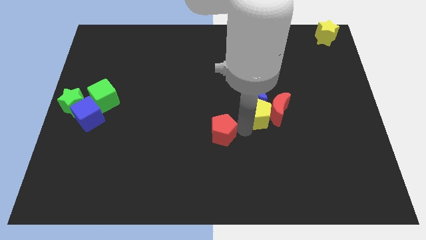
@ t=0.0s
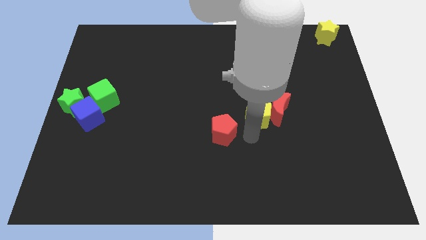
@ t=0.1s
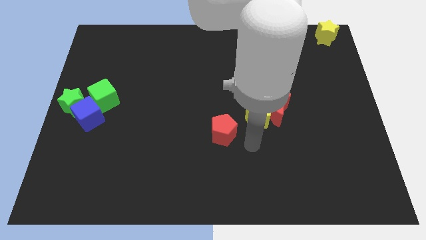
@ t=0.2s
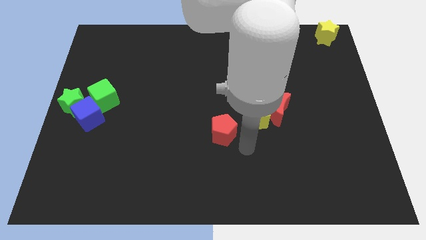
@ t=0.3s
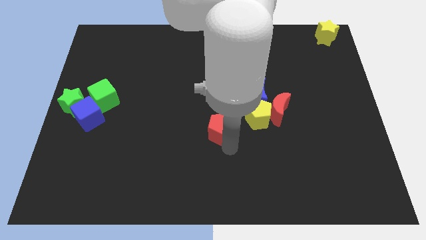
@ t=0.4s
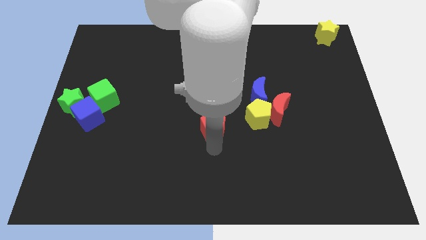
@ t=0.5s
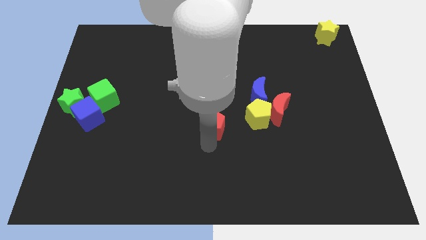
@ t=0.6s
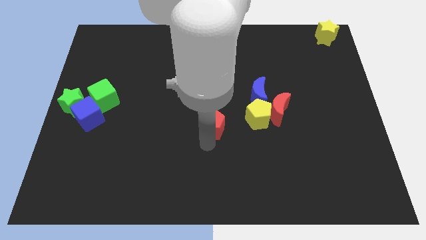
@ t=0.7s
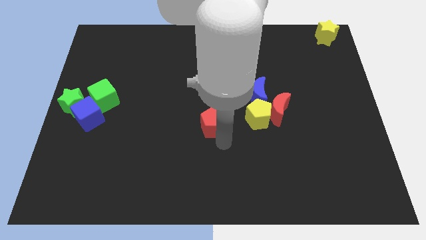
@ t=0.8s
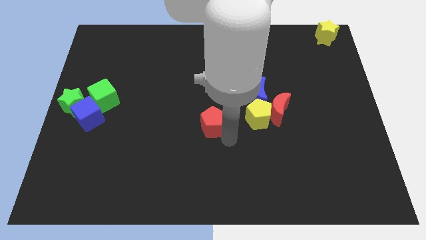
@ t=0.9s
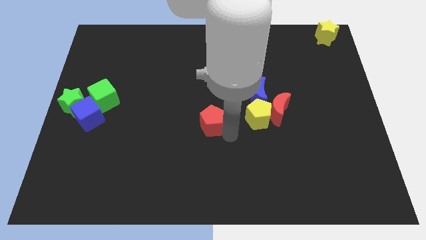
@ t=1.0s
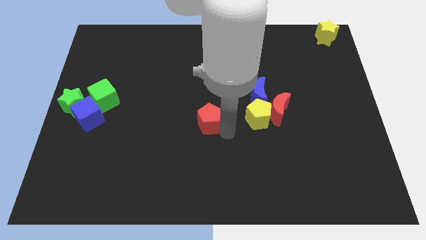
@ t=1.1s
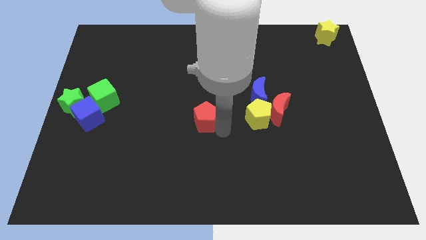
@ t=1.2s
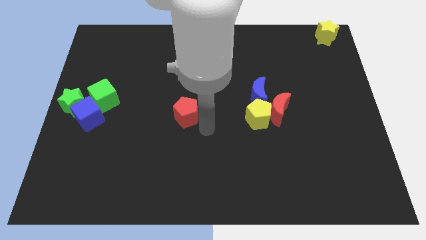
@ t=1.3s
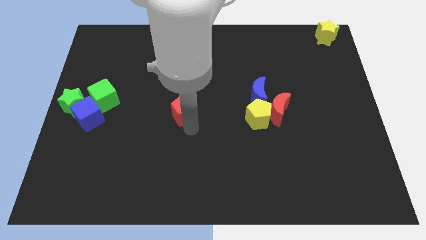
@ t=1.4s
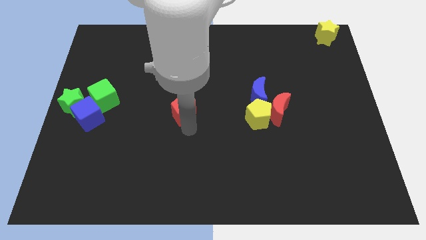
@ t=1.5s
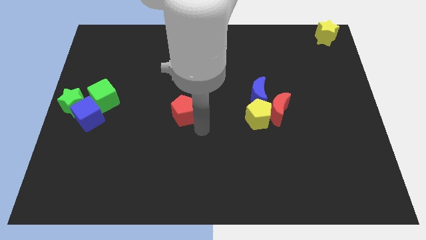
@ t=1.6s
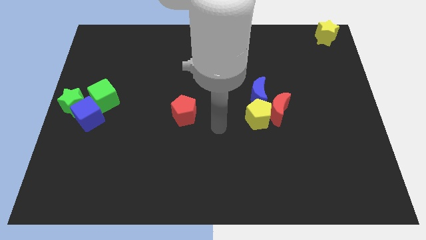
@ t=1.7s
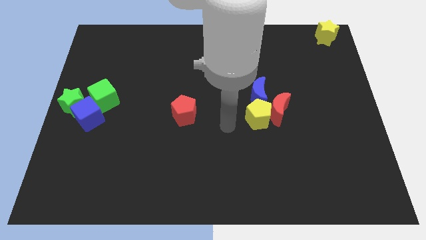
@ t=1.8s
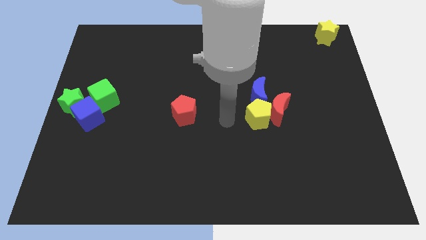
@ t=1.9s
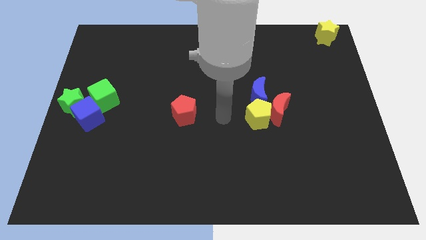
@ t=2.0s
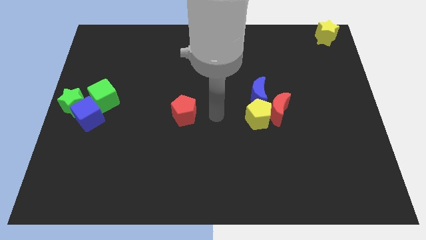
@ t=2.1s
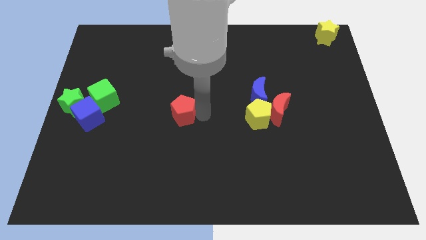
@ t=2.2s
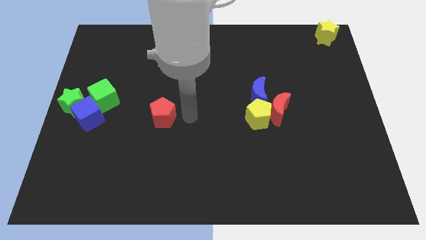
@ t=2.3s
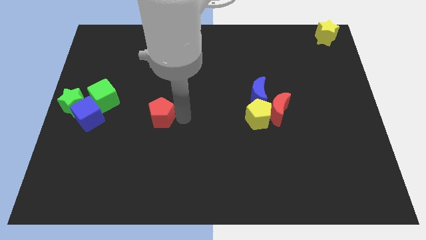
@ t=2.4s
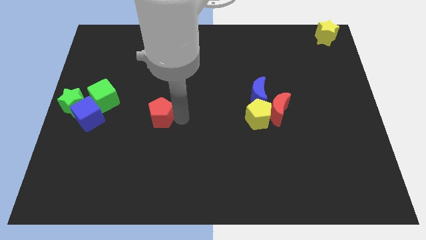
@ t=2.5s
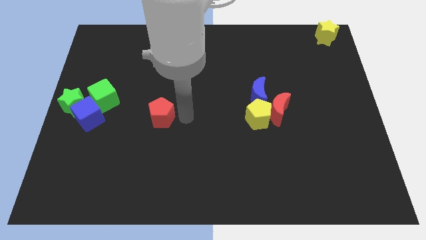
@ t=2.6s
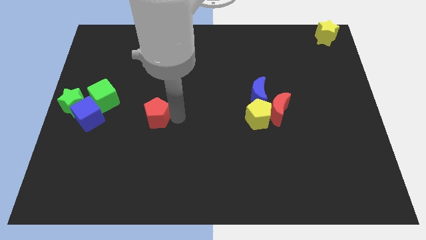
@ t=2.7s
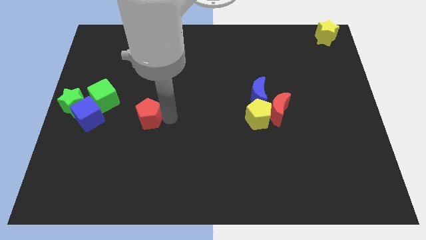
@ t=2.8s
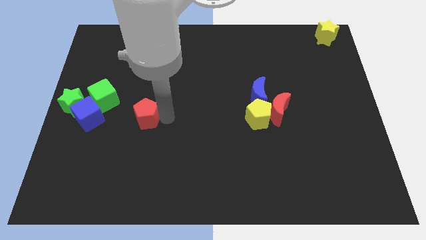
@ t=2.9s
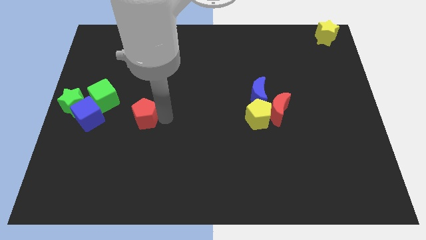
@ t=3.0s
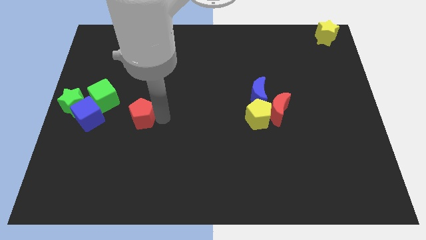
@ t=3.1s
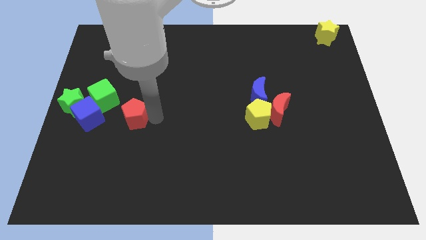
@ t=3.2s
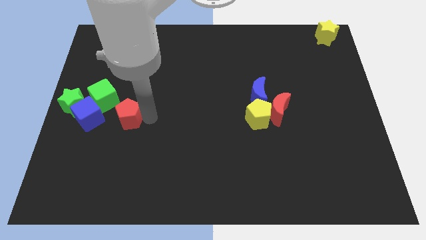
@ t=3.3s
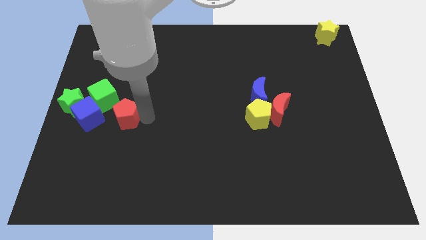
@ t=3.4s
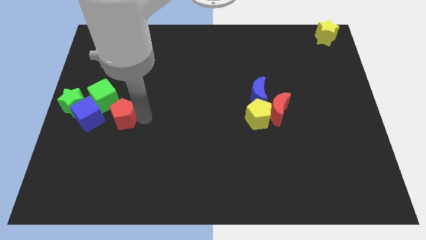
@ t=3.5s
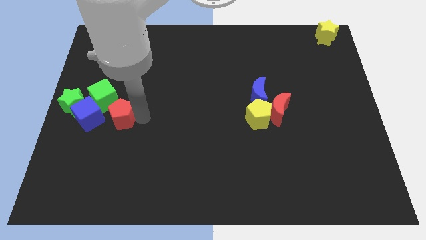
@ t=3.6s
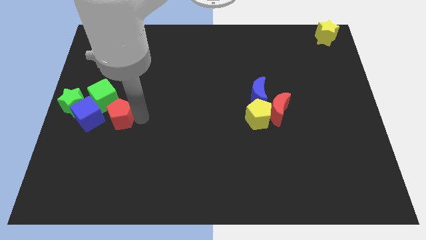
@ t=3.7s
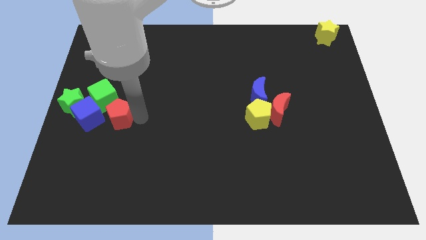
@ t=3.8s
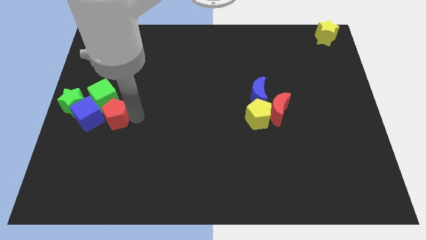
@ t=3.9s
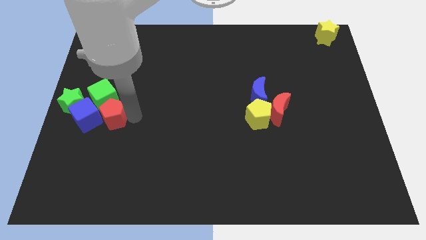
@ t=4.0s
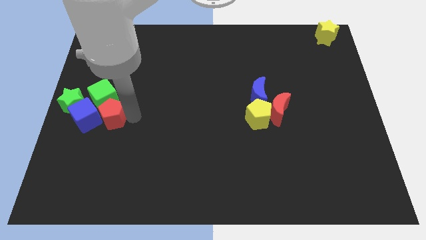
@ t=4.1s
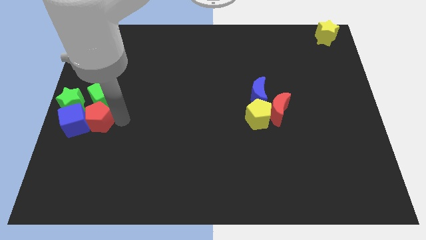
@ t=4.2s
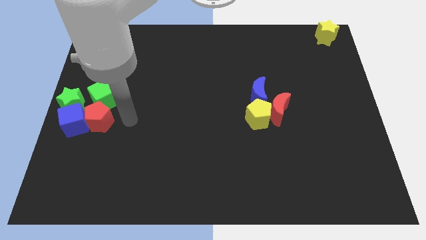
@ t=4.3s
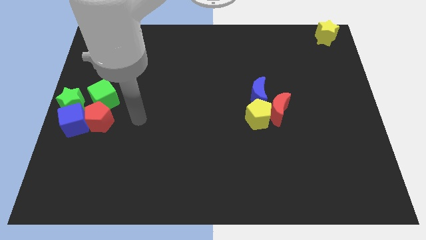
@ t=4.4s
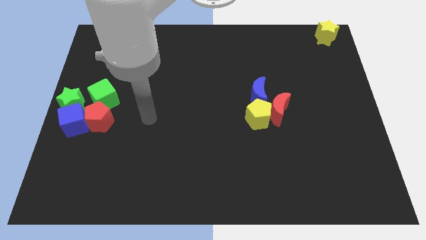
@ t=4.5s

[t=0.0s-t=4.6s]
move red pentagon into the right of blue cube

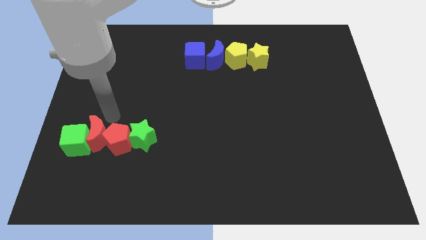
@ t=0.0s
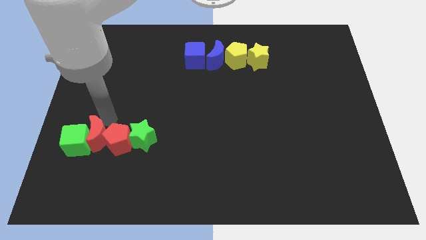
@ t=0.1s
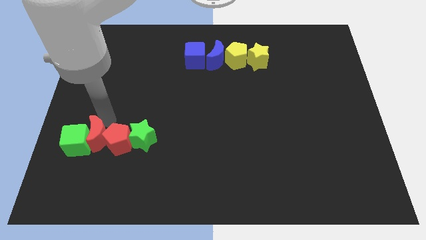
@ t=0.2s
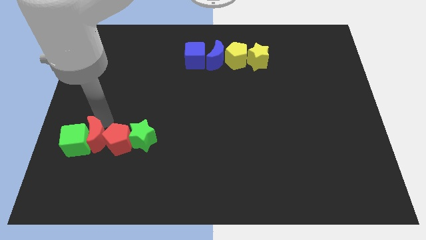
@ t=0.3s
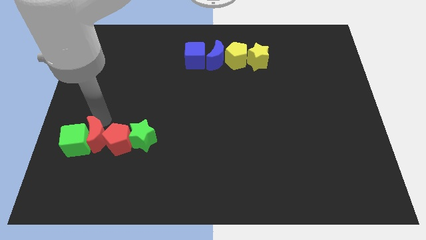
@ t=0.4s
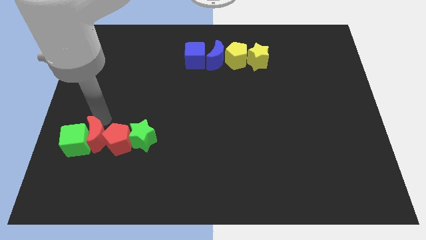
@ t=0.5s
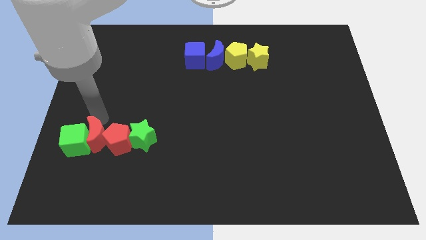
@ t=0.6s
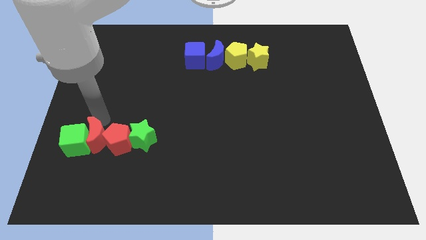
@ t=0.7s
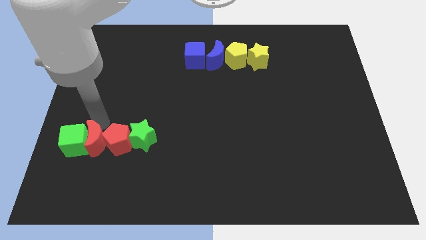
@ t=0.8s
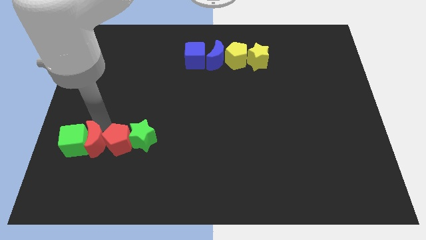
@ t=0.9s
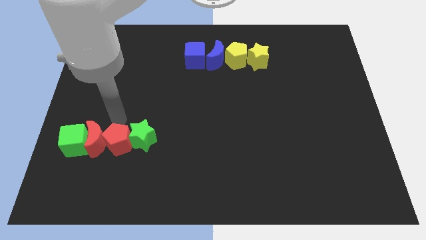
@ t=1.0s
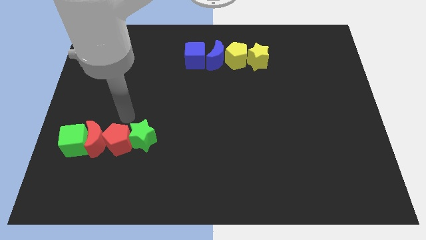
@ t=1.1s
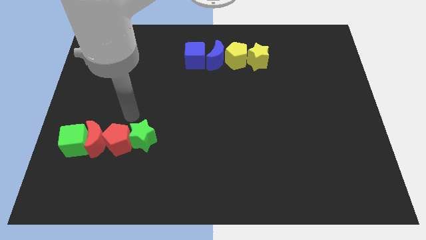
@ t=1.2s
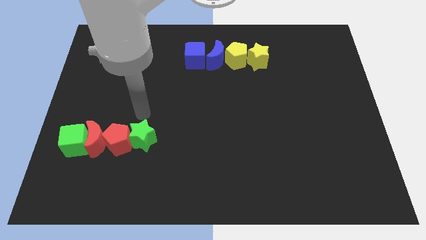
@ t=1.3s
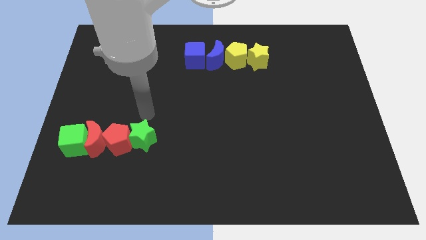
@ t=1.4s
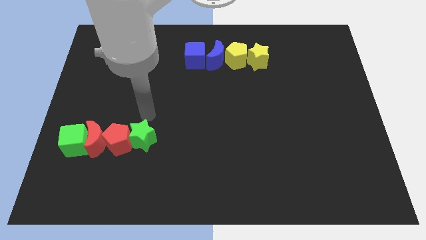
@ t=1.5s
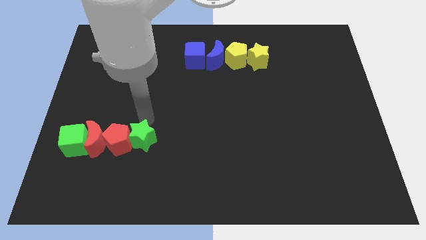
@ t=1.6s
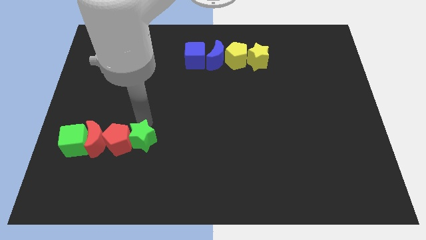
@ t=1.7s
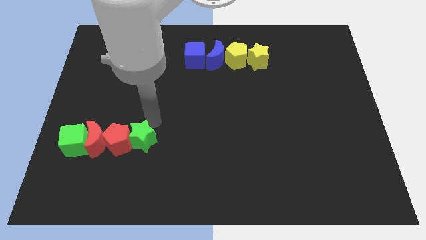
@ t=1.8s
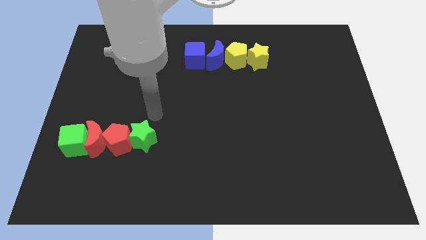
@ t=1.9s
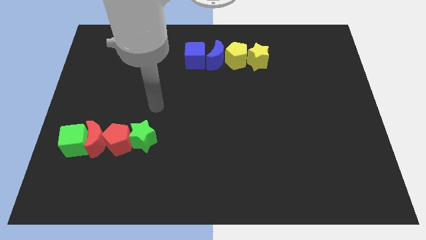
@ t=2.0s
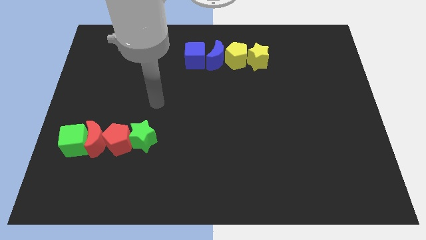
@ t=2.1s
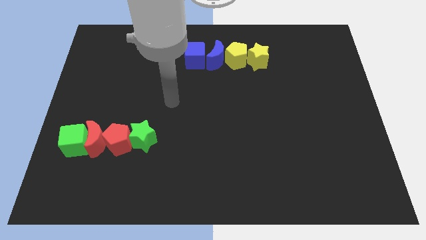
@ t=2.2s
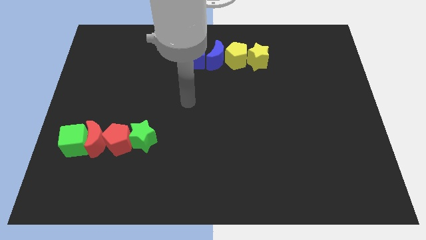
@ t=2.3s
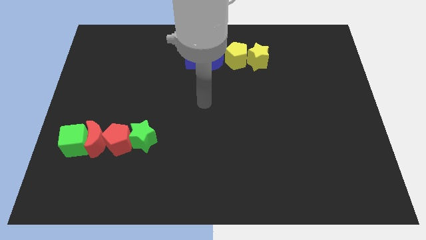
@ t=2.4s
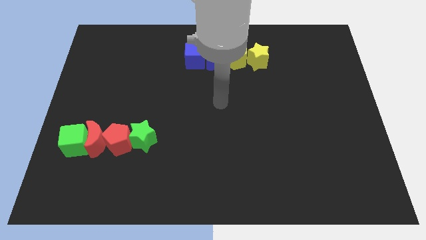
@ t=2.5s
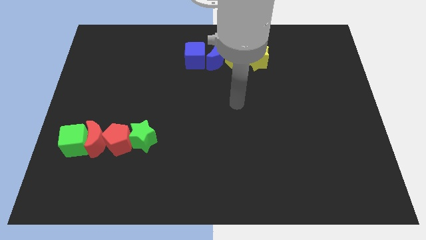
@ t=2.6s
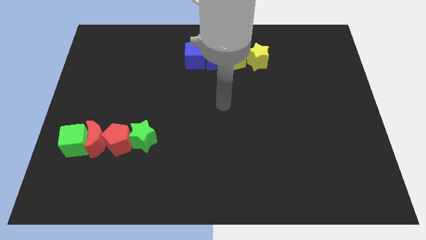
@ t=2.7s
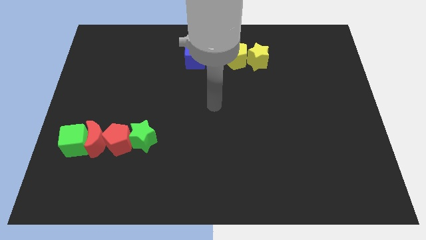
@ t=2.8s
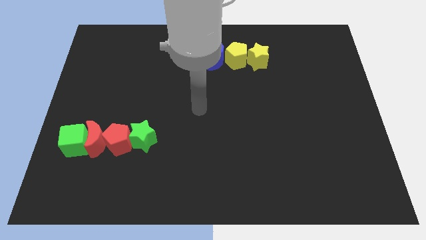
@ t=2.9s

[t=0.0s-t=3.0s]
go away from the group of blocks

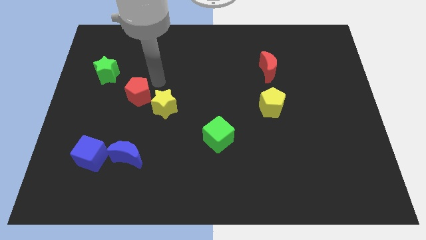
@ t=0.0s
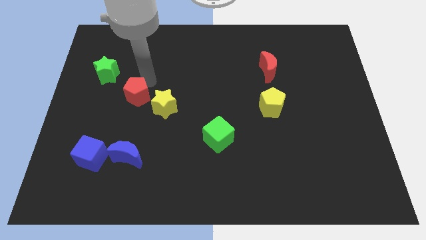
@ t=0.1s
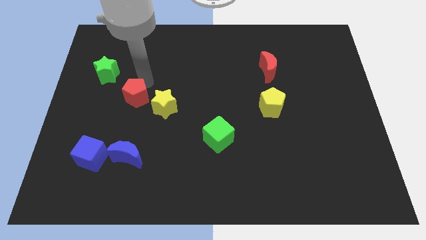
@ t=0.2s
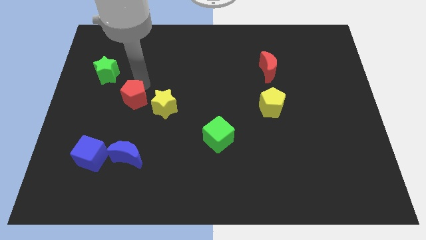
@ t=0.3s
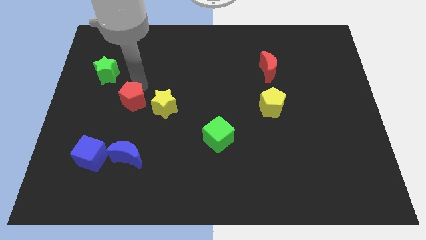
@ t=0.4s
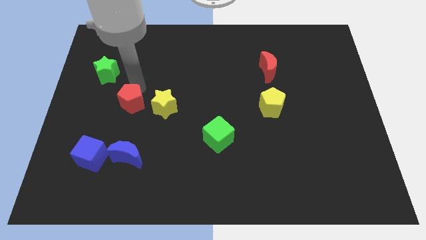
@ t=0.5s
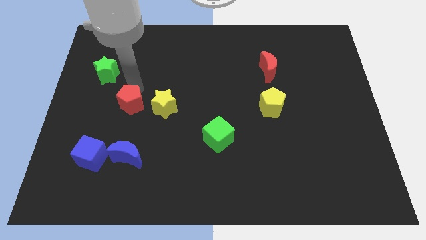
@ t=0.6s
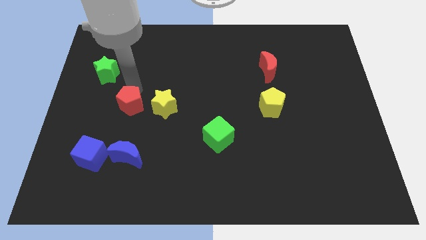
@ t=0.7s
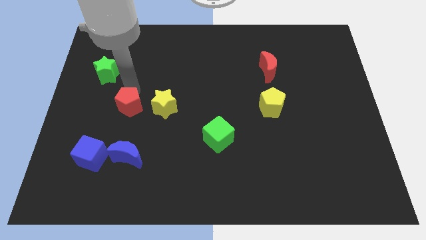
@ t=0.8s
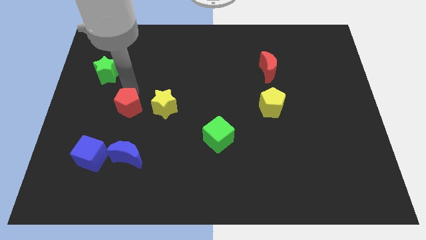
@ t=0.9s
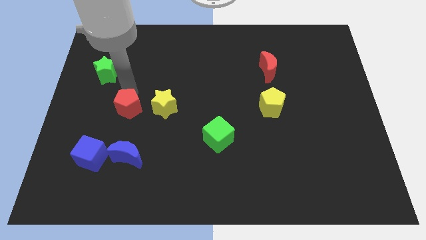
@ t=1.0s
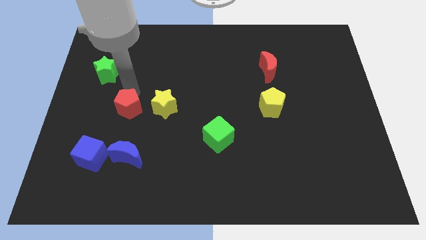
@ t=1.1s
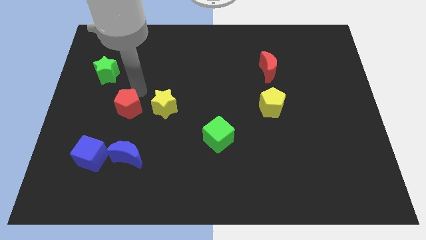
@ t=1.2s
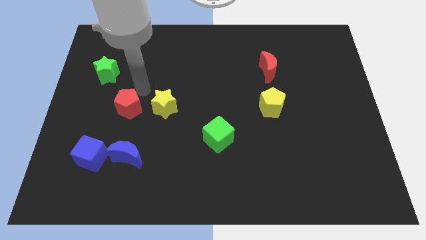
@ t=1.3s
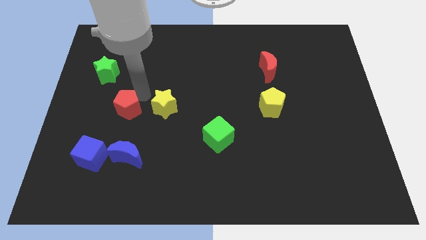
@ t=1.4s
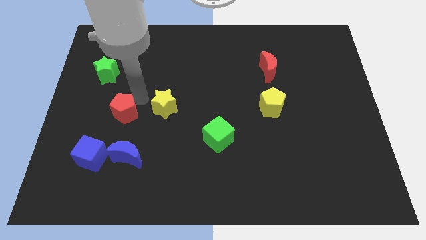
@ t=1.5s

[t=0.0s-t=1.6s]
move the red pentagon to the left side of the yellow star
